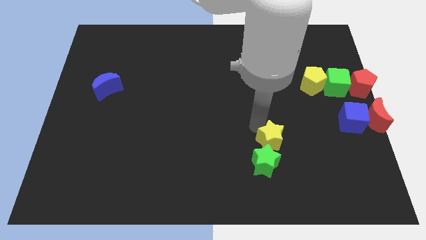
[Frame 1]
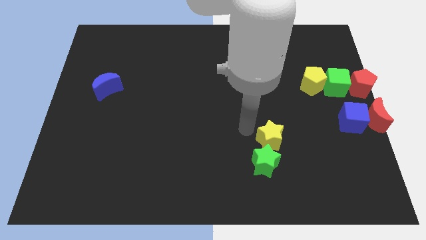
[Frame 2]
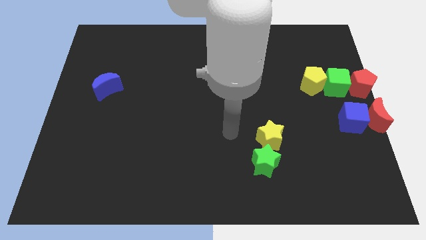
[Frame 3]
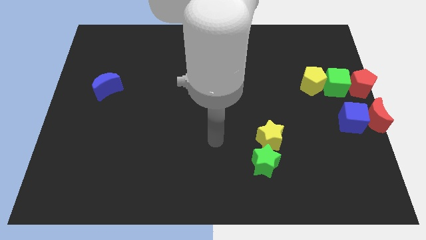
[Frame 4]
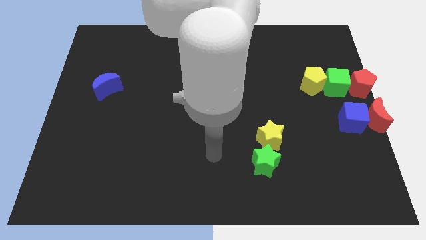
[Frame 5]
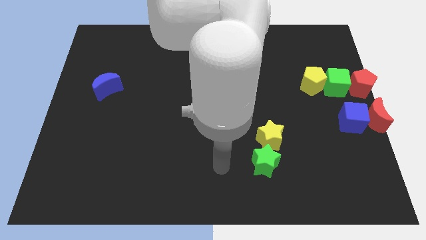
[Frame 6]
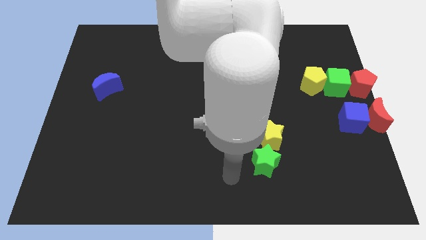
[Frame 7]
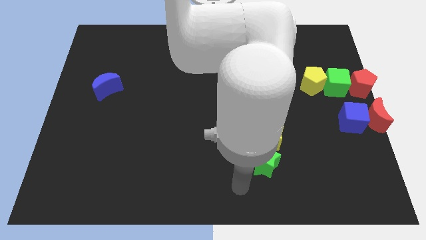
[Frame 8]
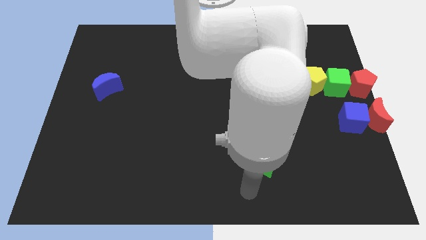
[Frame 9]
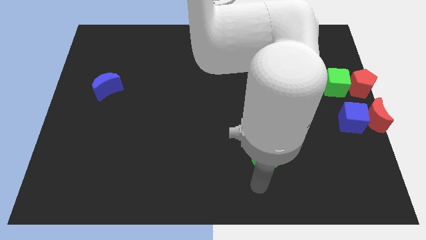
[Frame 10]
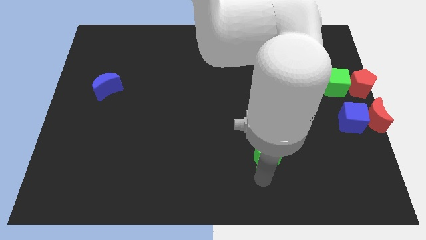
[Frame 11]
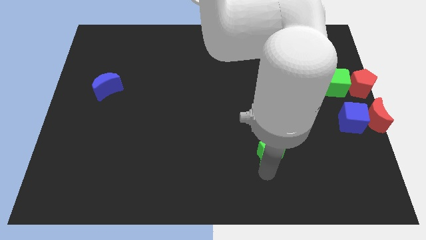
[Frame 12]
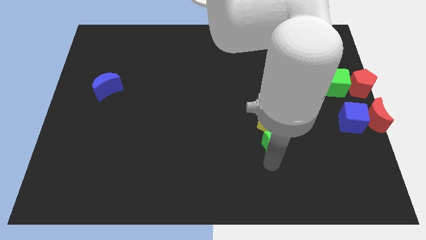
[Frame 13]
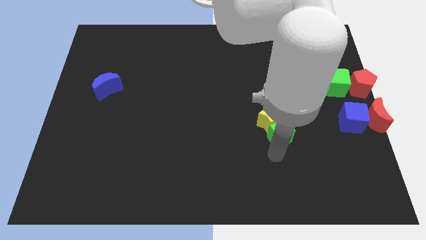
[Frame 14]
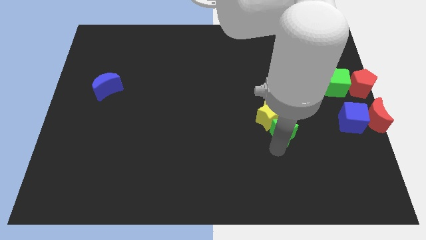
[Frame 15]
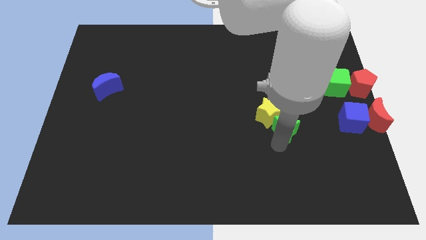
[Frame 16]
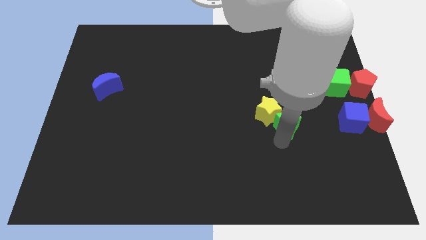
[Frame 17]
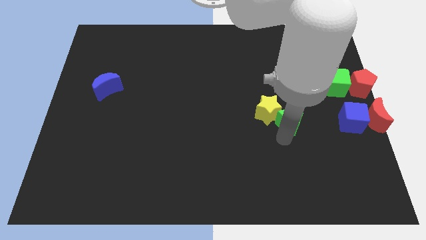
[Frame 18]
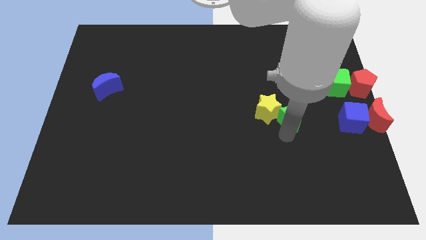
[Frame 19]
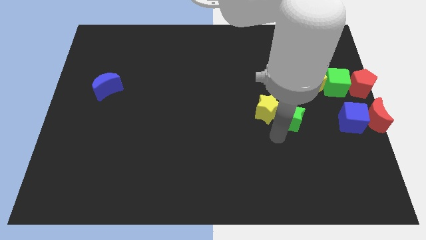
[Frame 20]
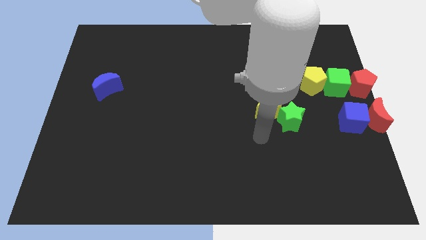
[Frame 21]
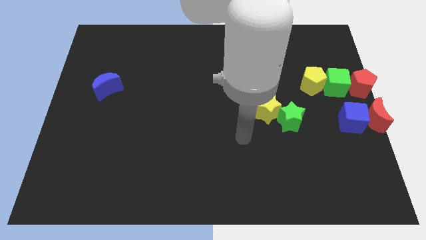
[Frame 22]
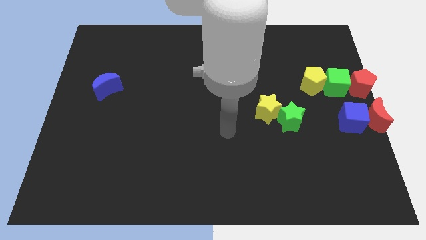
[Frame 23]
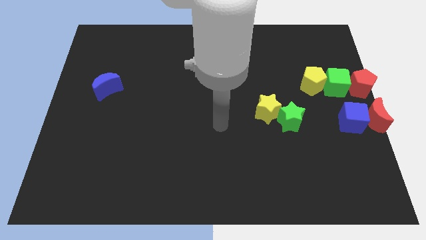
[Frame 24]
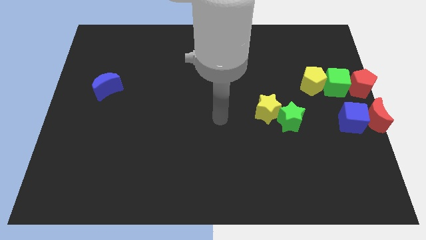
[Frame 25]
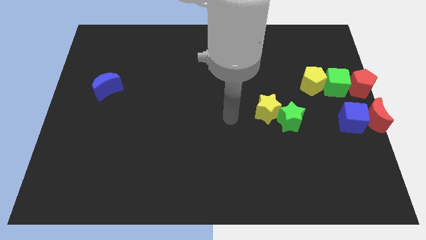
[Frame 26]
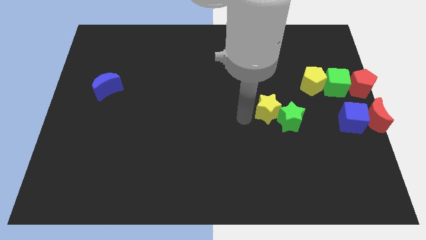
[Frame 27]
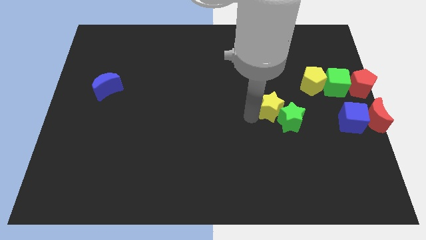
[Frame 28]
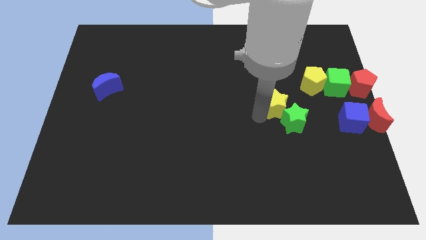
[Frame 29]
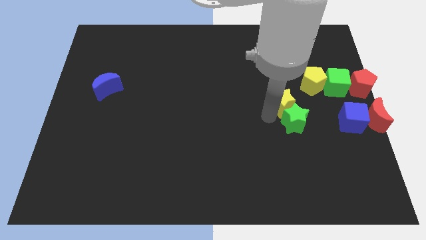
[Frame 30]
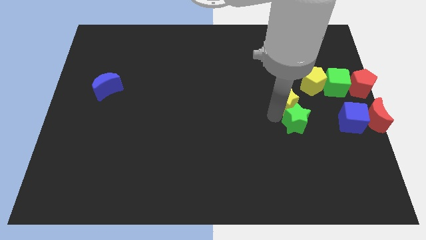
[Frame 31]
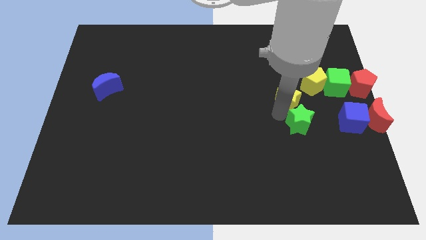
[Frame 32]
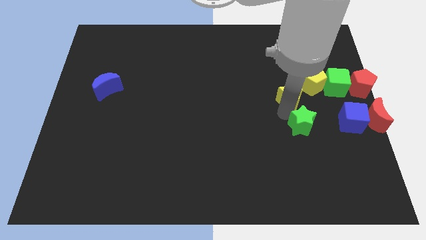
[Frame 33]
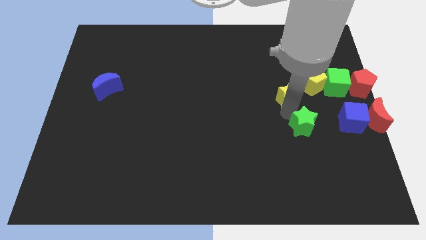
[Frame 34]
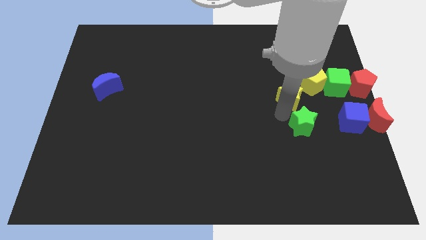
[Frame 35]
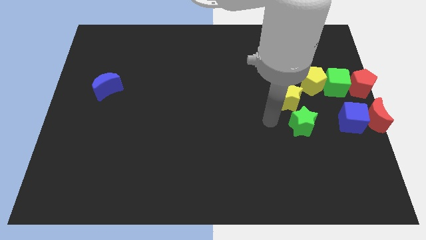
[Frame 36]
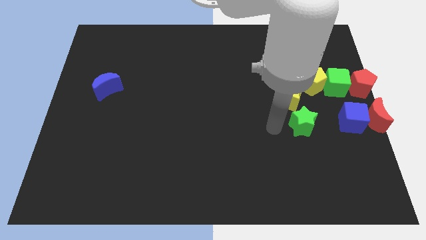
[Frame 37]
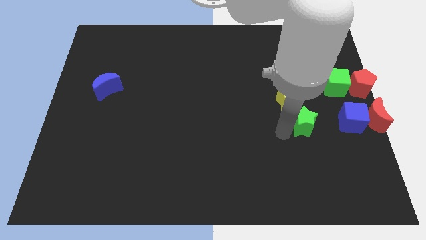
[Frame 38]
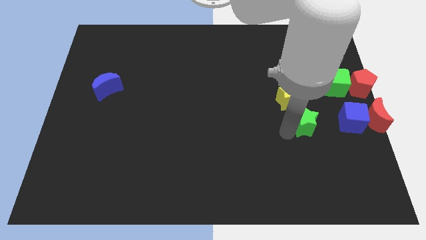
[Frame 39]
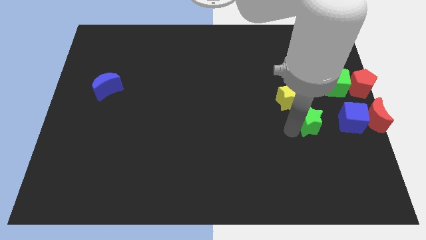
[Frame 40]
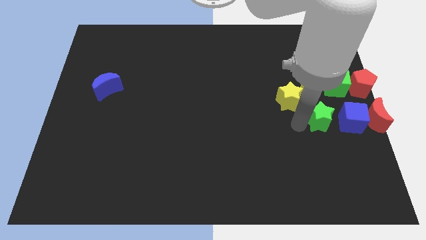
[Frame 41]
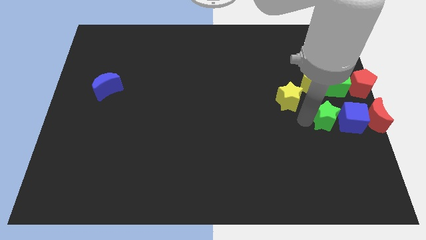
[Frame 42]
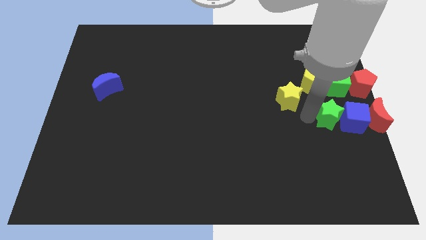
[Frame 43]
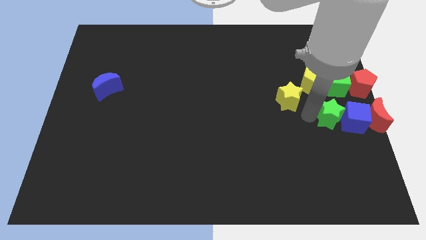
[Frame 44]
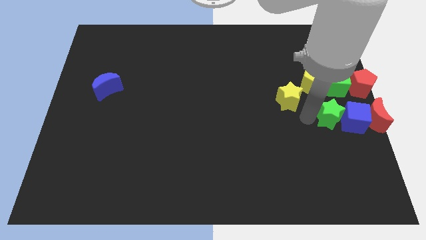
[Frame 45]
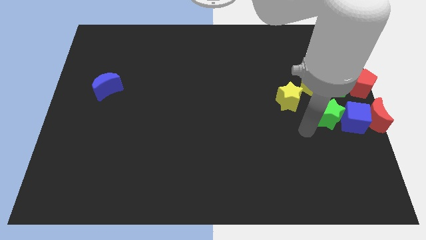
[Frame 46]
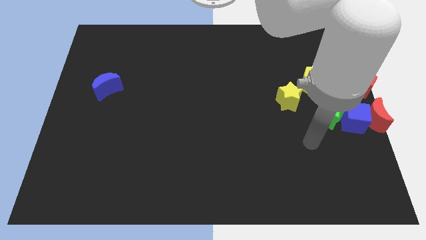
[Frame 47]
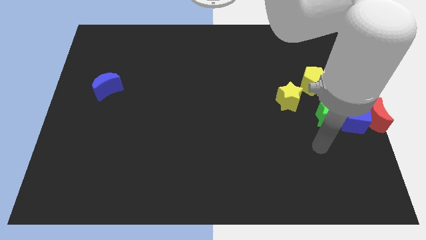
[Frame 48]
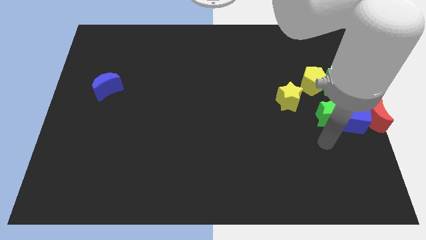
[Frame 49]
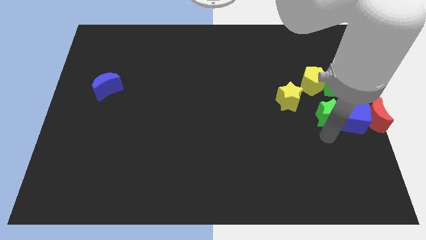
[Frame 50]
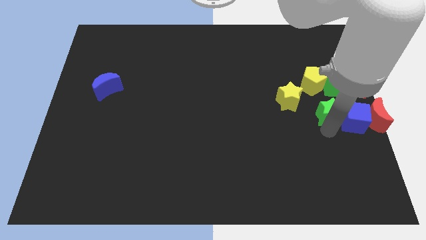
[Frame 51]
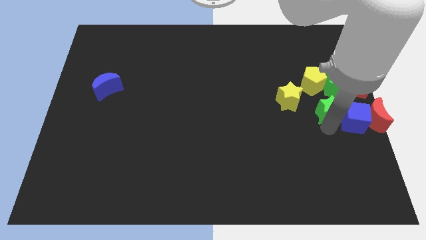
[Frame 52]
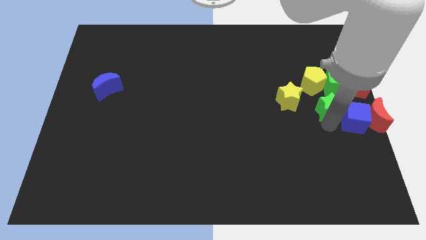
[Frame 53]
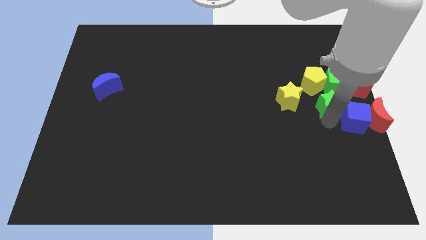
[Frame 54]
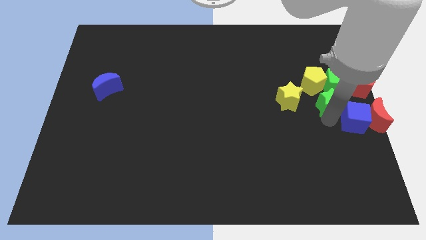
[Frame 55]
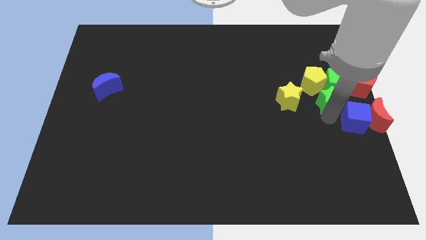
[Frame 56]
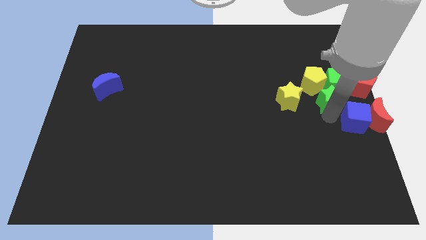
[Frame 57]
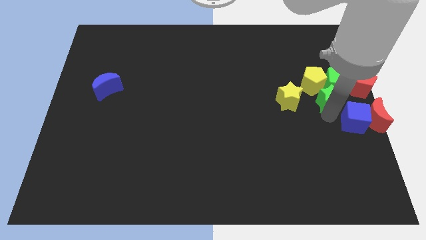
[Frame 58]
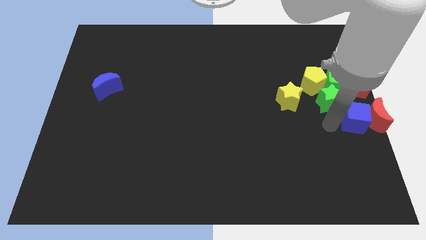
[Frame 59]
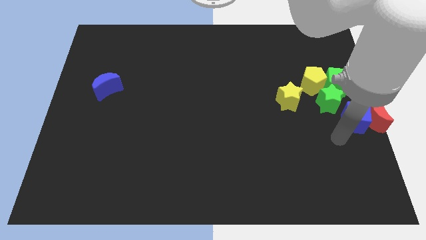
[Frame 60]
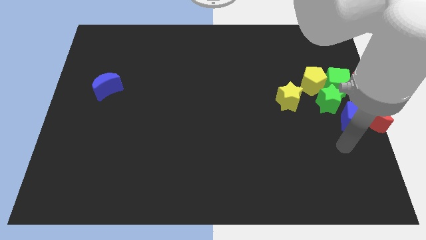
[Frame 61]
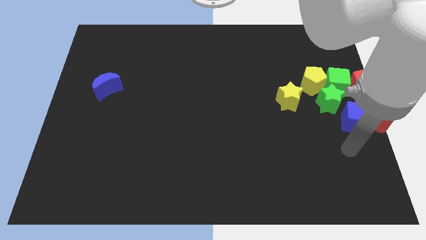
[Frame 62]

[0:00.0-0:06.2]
push the green star into the green cube

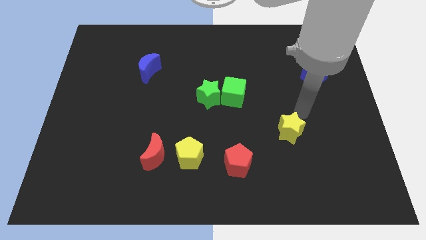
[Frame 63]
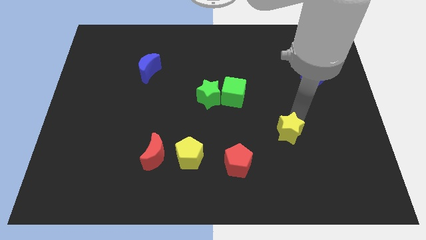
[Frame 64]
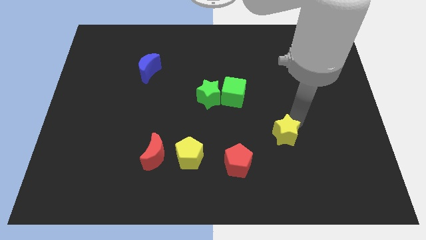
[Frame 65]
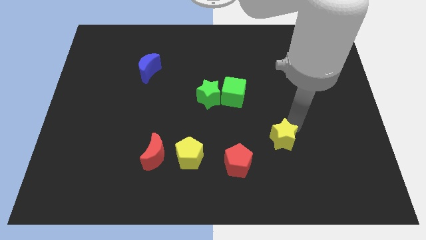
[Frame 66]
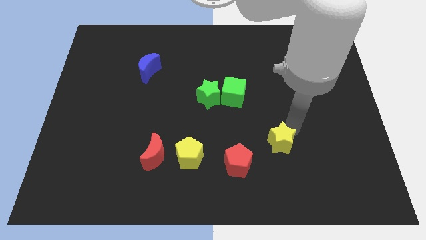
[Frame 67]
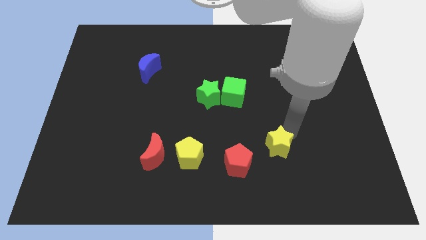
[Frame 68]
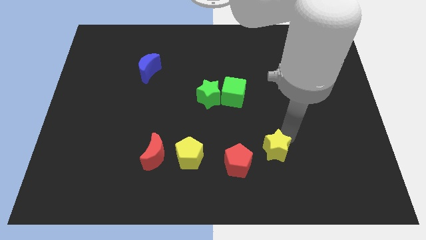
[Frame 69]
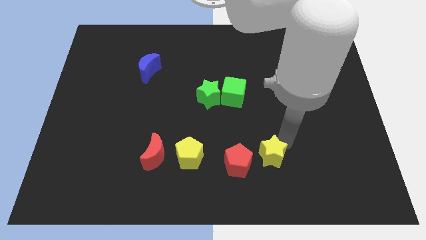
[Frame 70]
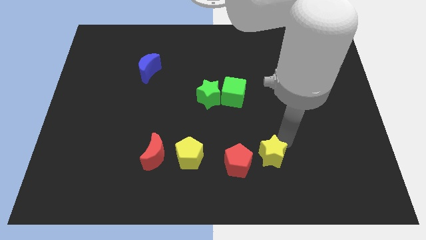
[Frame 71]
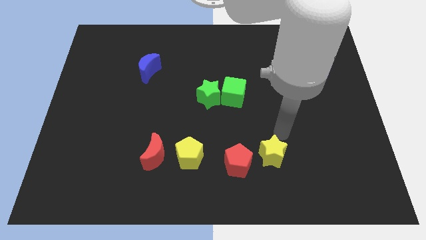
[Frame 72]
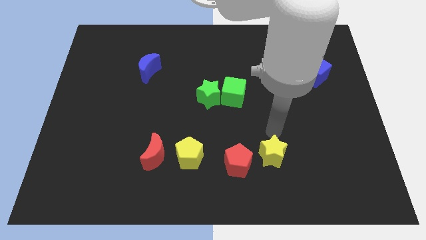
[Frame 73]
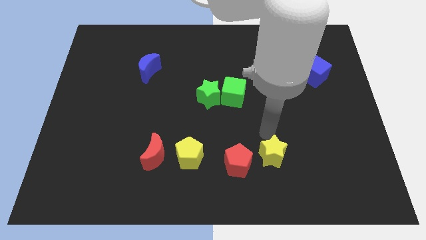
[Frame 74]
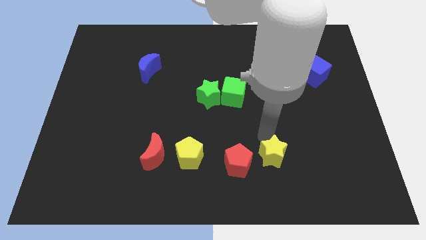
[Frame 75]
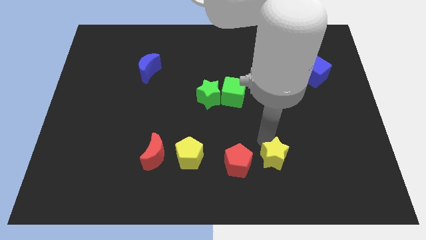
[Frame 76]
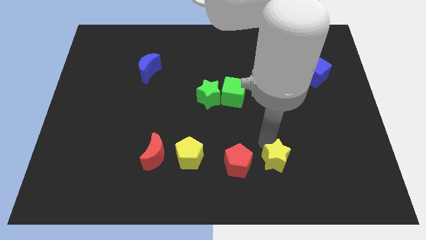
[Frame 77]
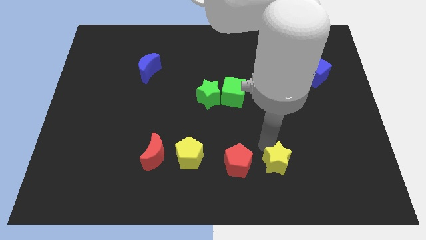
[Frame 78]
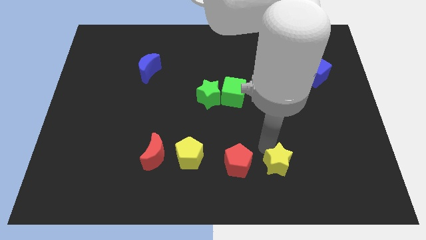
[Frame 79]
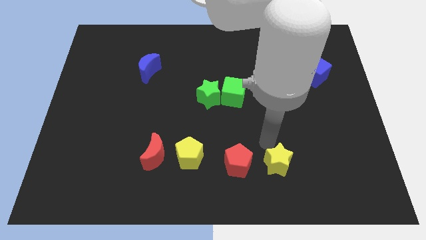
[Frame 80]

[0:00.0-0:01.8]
drag the yellow star to the right of the red pentagon

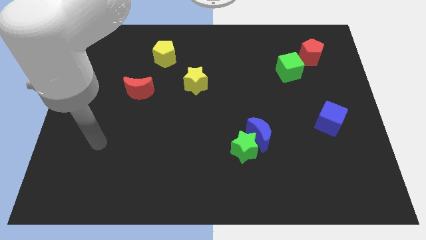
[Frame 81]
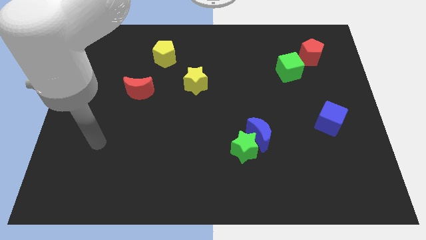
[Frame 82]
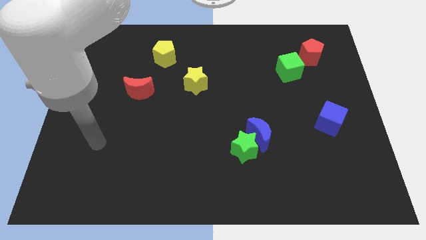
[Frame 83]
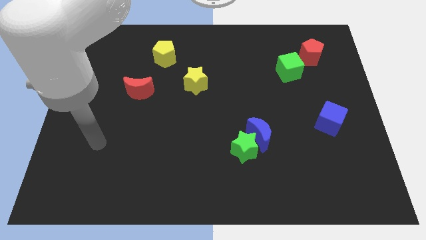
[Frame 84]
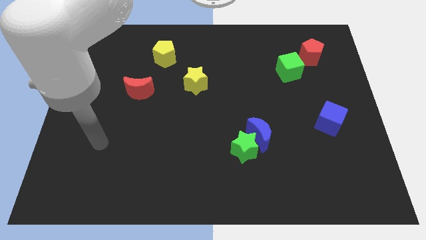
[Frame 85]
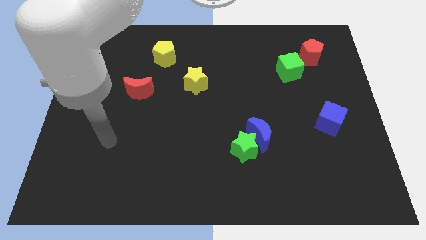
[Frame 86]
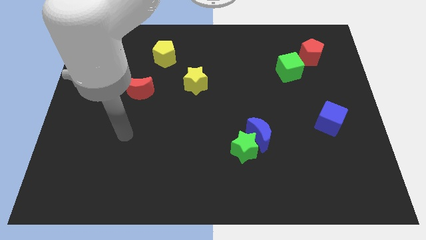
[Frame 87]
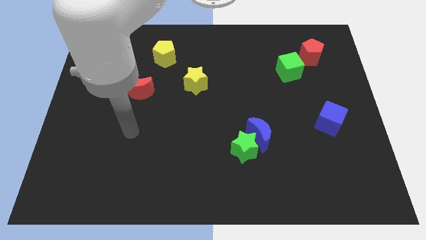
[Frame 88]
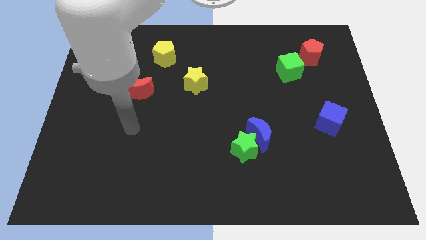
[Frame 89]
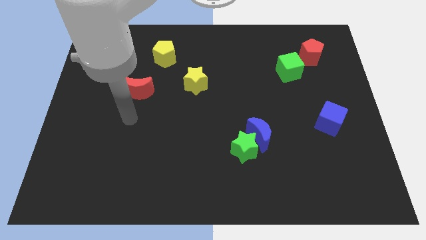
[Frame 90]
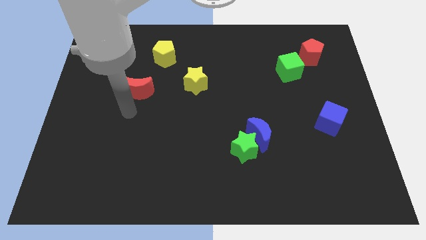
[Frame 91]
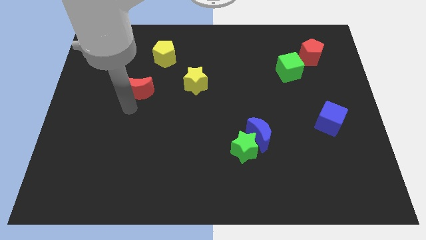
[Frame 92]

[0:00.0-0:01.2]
point your arm at the bottom of red moon
